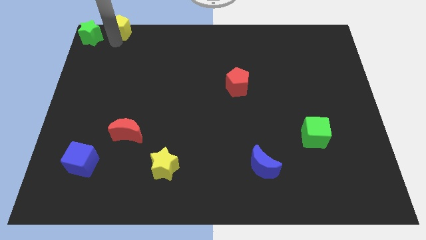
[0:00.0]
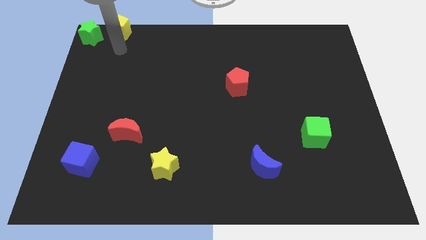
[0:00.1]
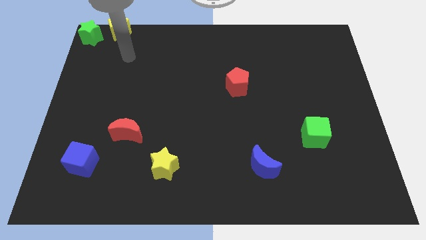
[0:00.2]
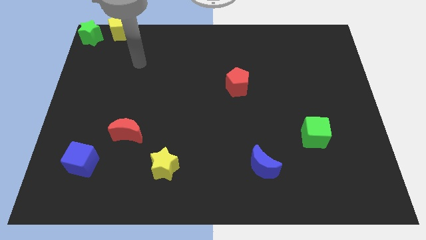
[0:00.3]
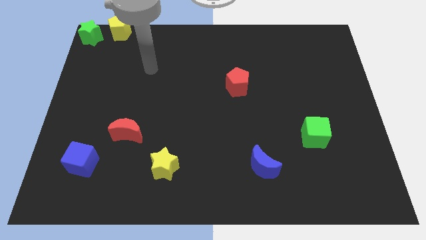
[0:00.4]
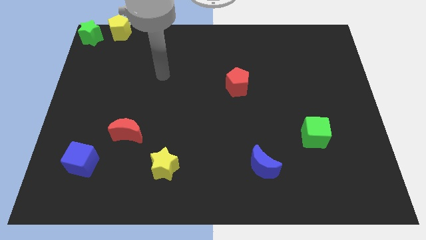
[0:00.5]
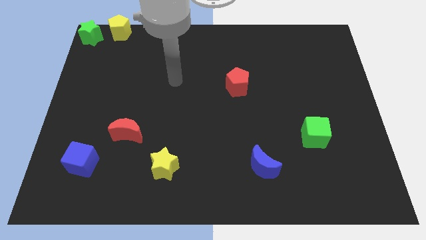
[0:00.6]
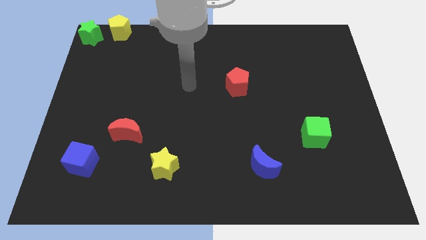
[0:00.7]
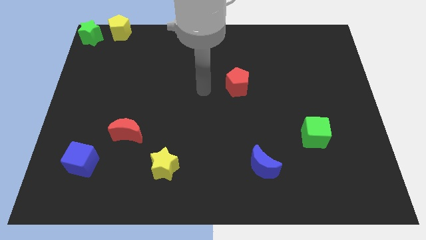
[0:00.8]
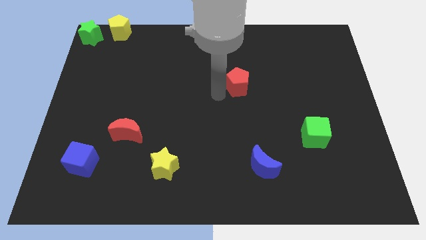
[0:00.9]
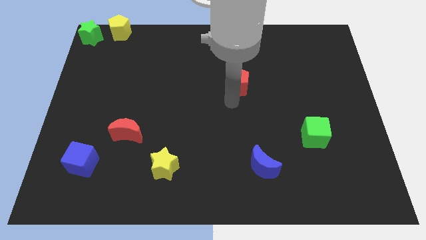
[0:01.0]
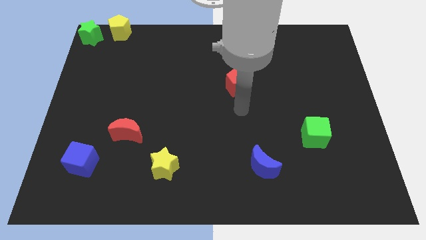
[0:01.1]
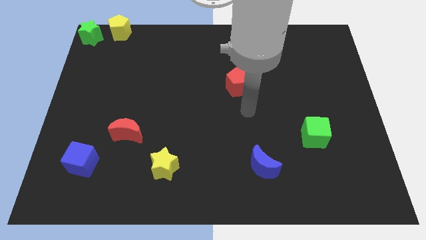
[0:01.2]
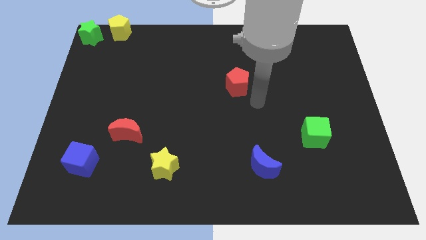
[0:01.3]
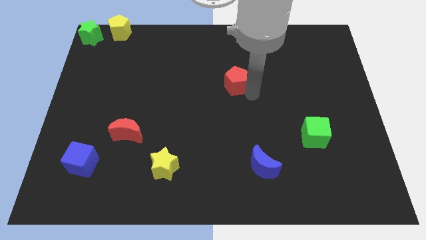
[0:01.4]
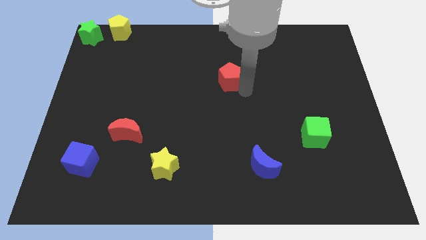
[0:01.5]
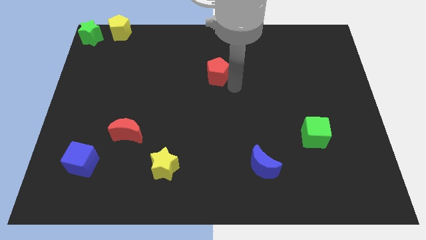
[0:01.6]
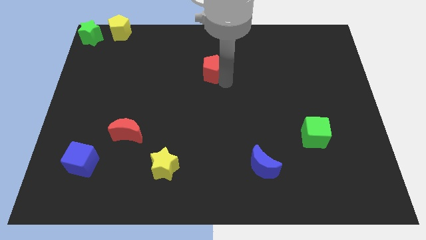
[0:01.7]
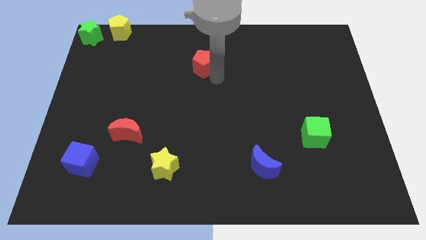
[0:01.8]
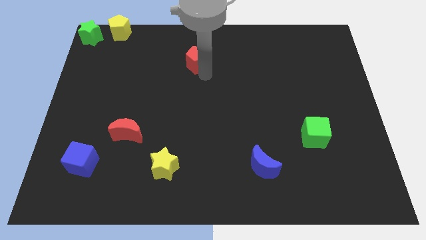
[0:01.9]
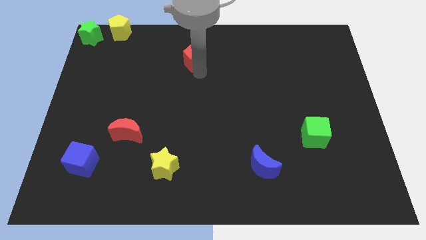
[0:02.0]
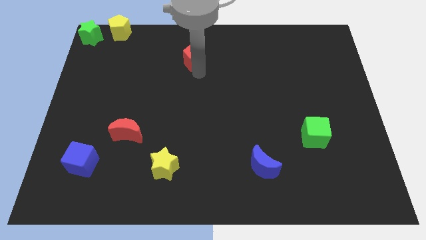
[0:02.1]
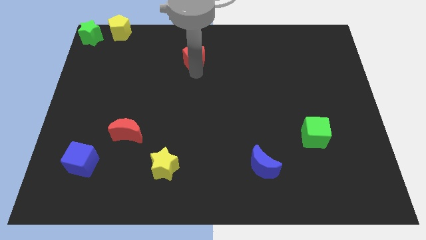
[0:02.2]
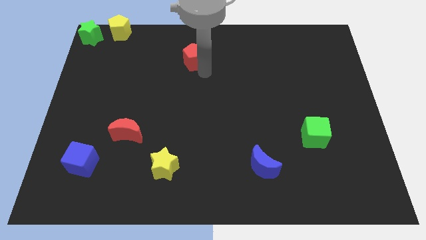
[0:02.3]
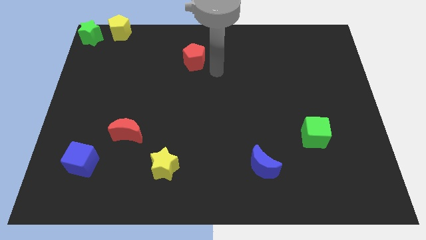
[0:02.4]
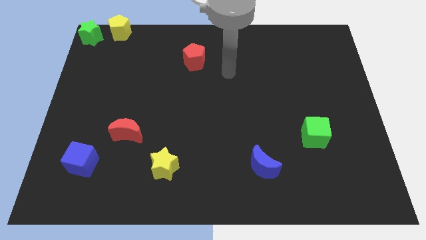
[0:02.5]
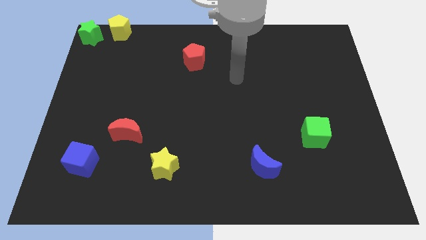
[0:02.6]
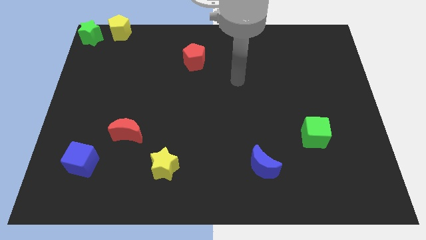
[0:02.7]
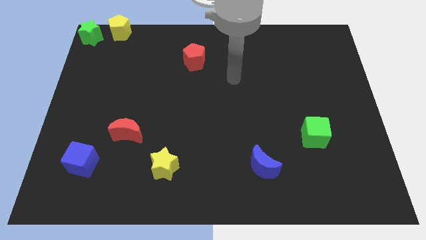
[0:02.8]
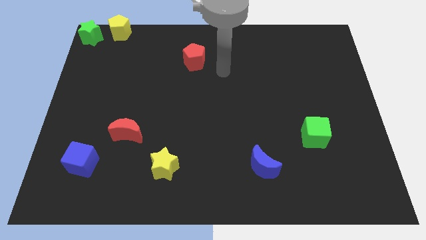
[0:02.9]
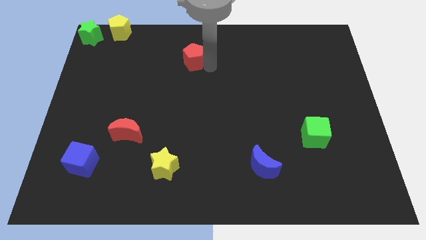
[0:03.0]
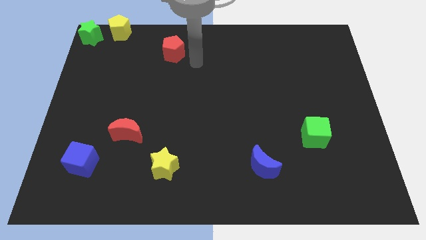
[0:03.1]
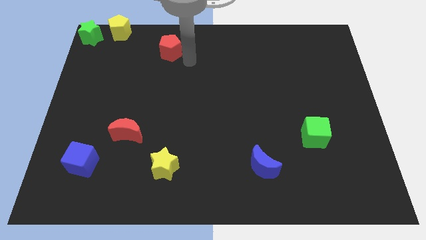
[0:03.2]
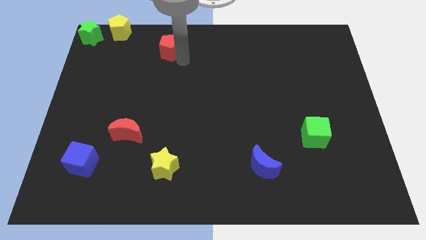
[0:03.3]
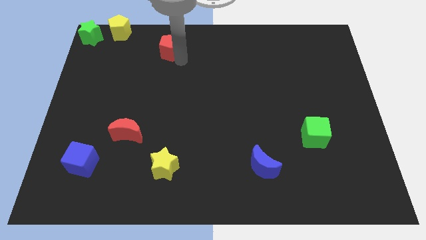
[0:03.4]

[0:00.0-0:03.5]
put the red pentagon vertically above the yellow star

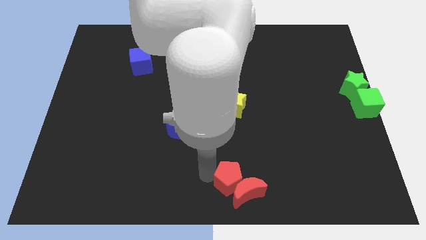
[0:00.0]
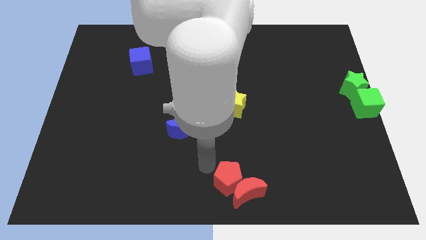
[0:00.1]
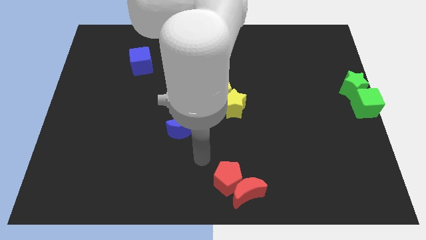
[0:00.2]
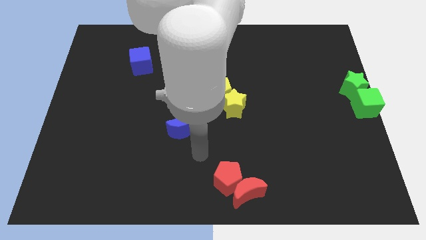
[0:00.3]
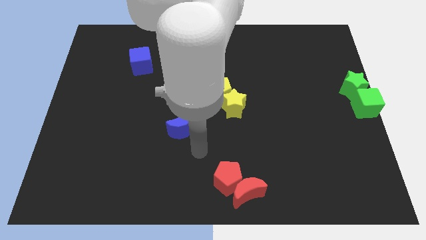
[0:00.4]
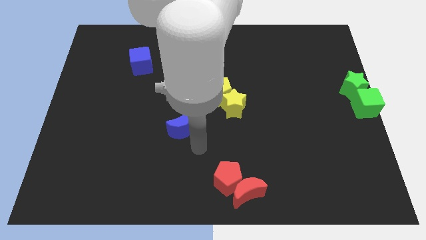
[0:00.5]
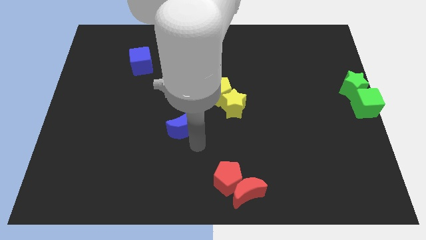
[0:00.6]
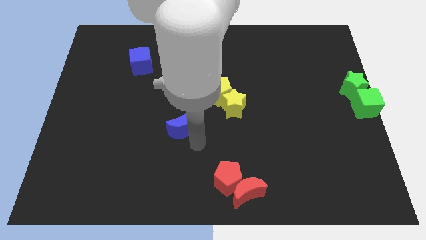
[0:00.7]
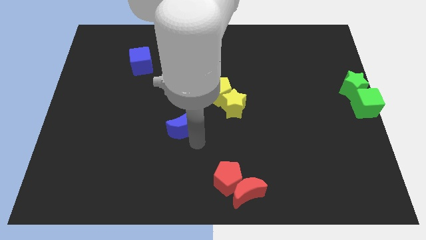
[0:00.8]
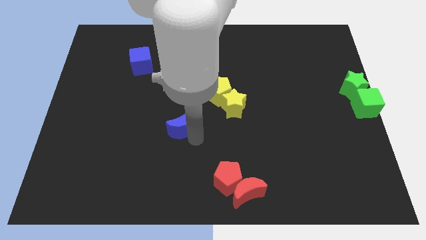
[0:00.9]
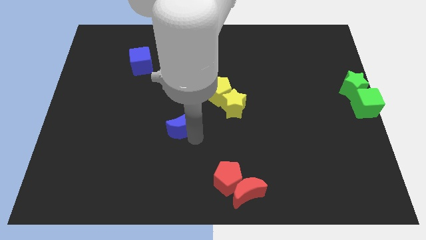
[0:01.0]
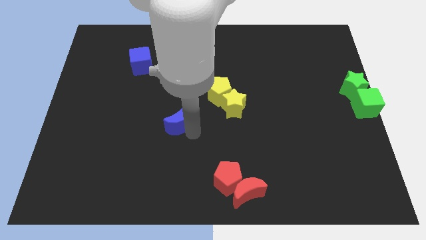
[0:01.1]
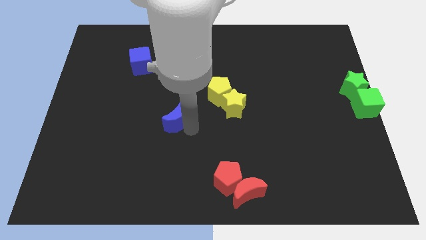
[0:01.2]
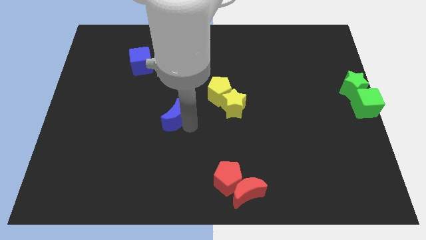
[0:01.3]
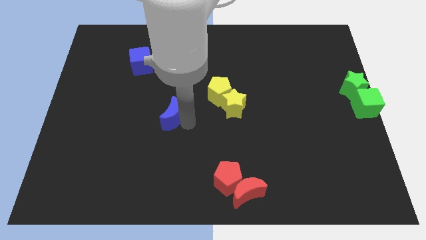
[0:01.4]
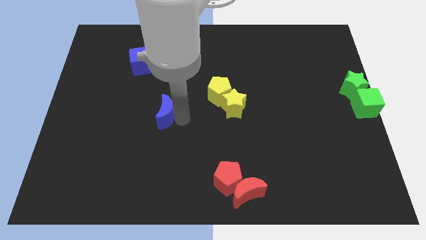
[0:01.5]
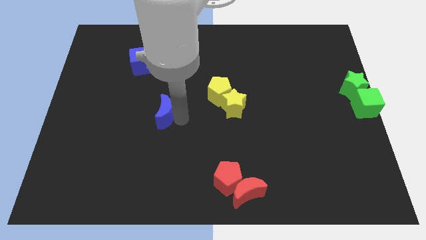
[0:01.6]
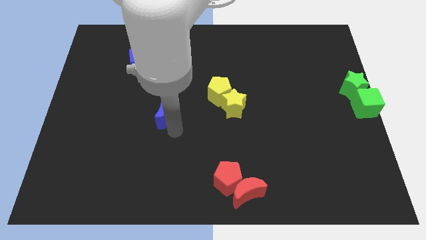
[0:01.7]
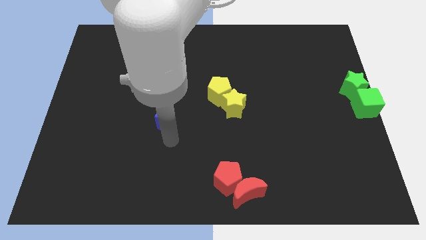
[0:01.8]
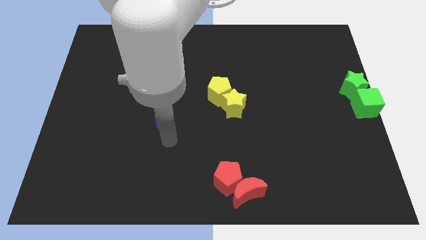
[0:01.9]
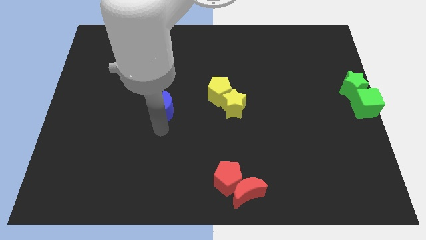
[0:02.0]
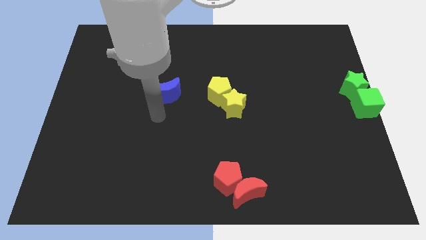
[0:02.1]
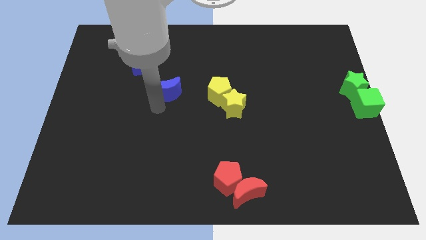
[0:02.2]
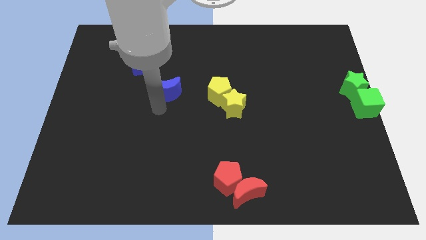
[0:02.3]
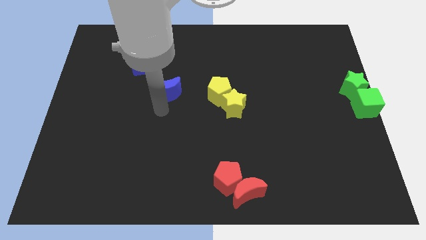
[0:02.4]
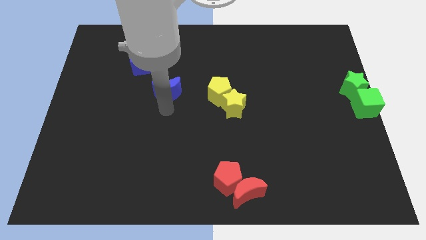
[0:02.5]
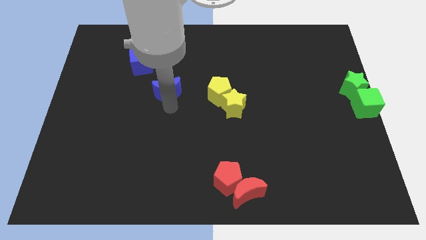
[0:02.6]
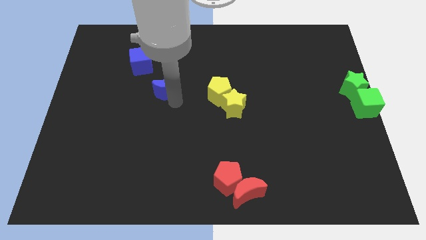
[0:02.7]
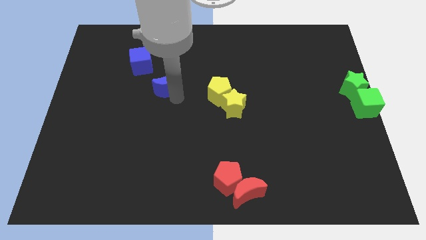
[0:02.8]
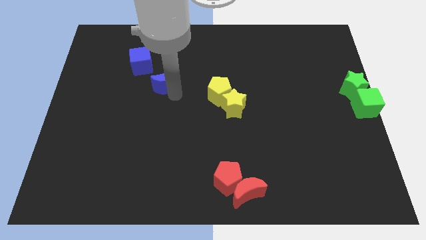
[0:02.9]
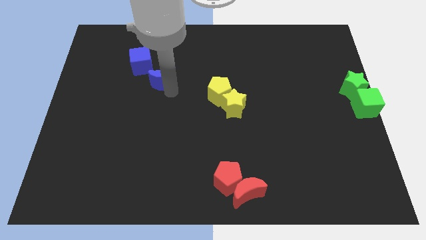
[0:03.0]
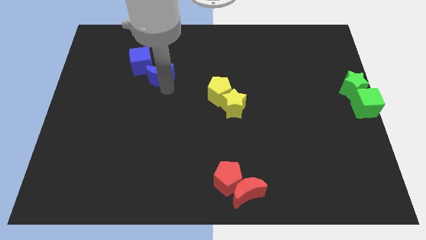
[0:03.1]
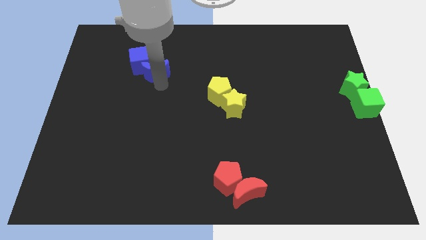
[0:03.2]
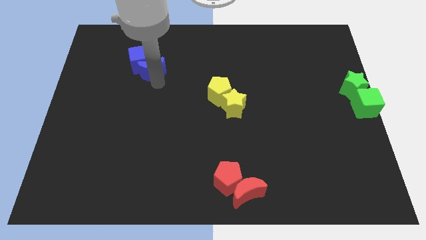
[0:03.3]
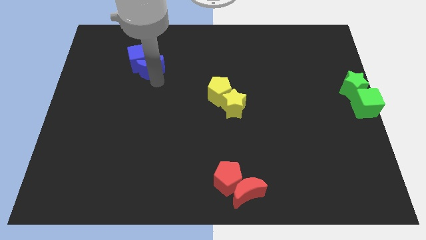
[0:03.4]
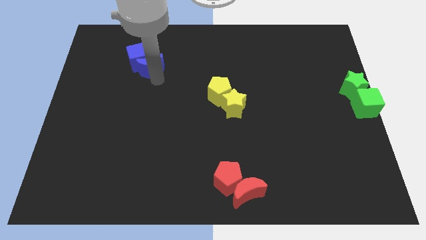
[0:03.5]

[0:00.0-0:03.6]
drag the blue crescent into the bottom side of the blue cube

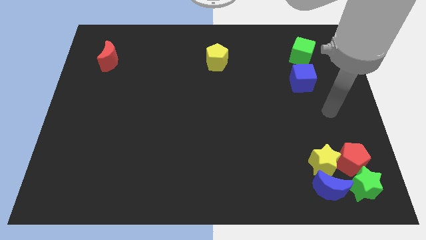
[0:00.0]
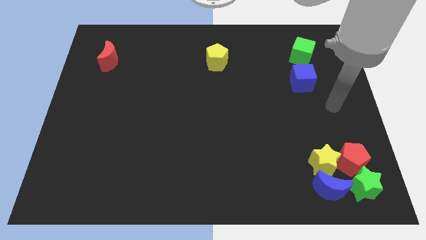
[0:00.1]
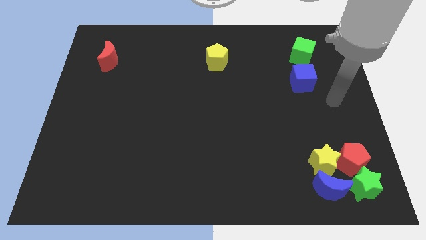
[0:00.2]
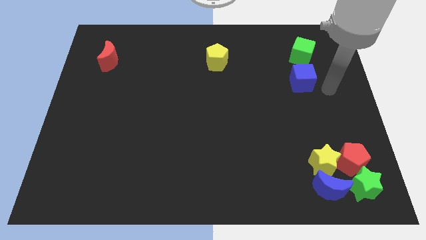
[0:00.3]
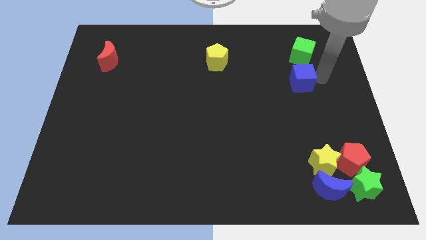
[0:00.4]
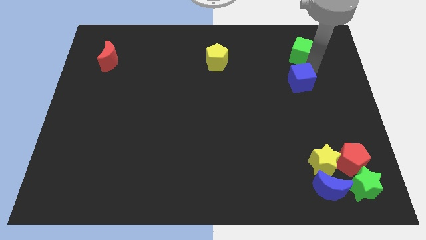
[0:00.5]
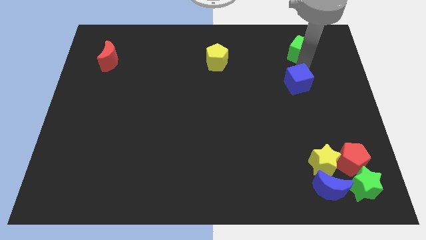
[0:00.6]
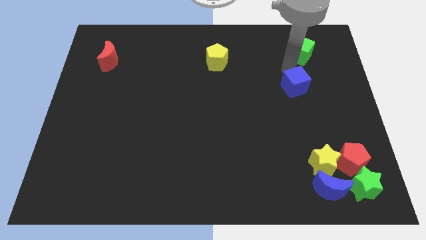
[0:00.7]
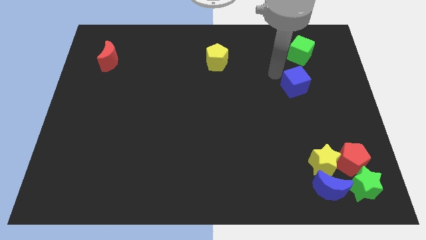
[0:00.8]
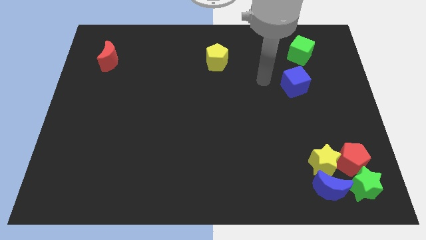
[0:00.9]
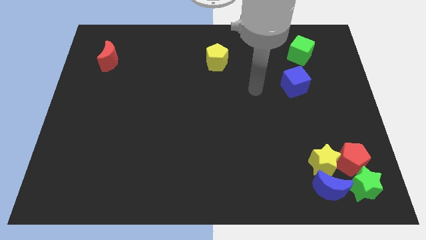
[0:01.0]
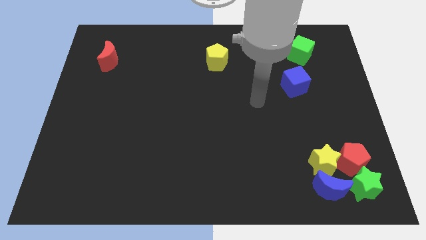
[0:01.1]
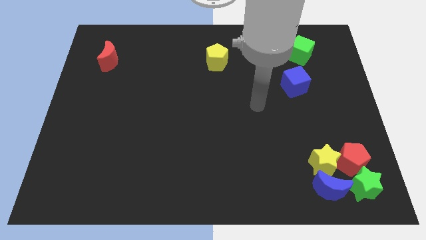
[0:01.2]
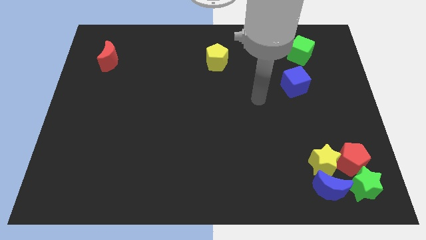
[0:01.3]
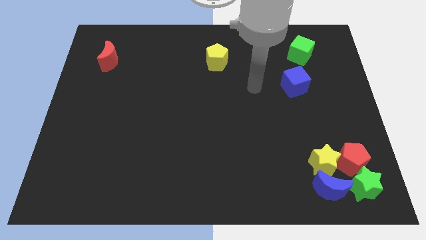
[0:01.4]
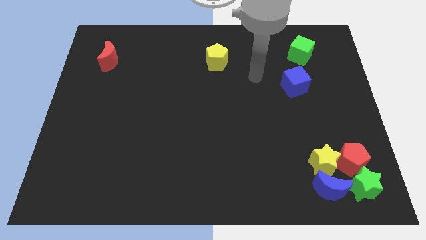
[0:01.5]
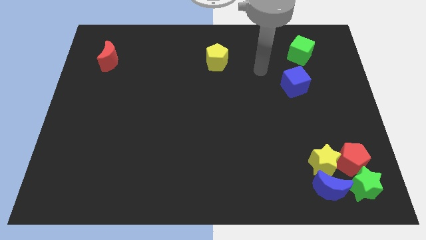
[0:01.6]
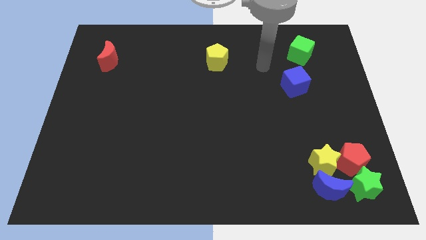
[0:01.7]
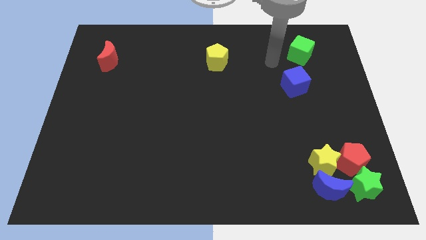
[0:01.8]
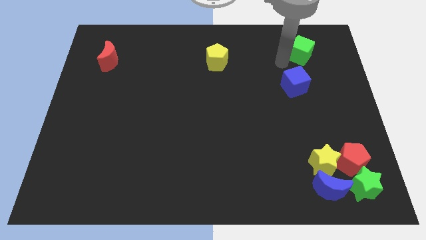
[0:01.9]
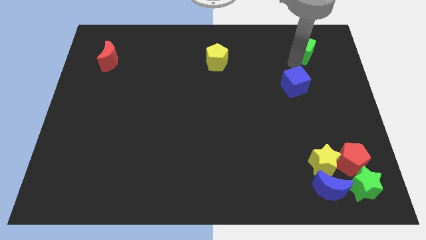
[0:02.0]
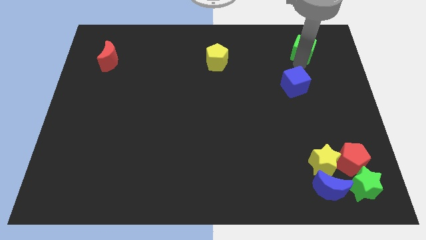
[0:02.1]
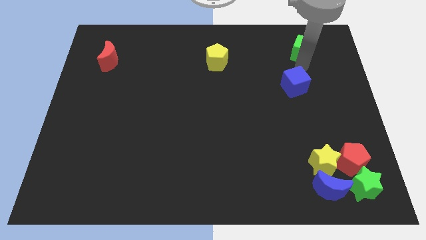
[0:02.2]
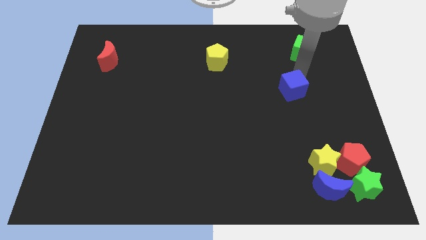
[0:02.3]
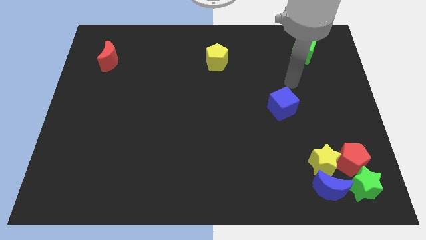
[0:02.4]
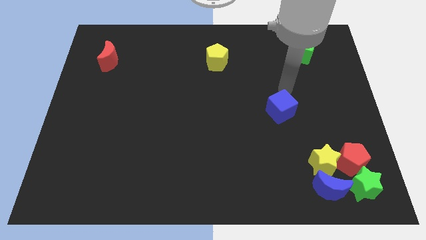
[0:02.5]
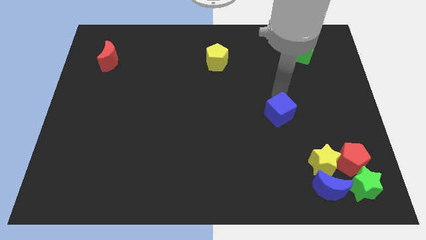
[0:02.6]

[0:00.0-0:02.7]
separate the blue cube and green cube
